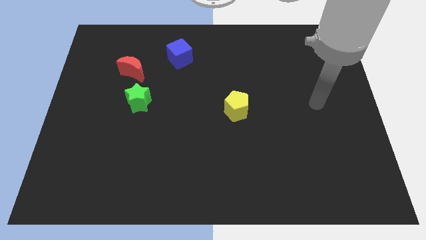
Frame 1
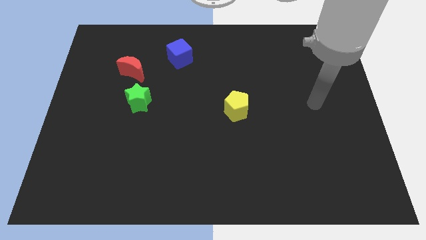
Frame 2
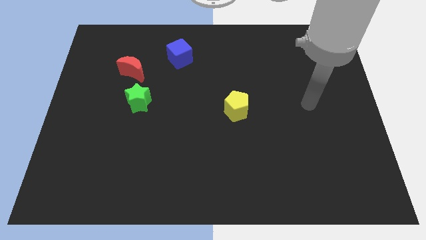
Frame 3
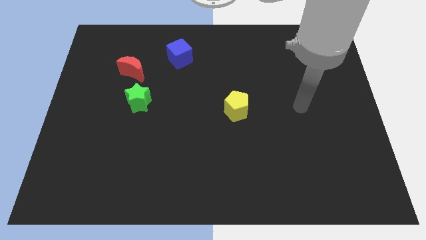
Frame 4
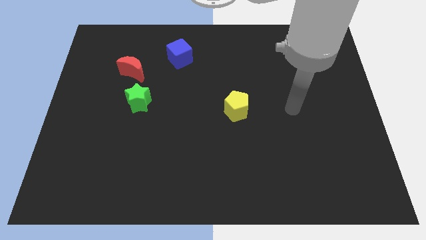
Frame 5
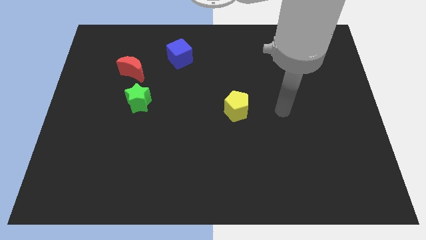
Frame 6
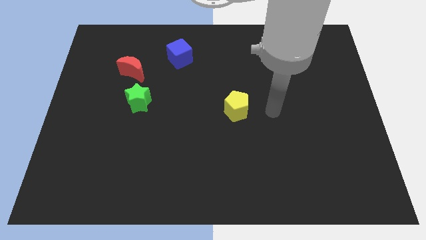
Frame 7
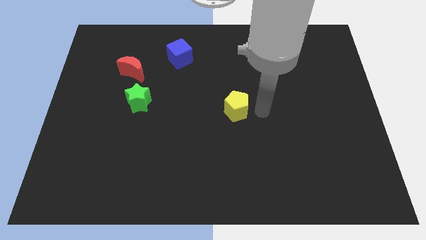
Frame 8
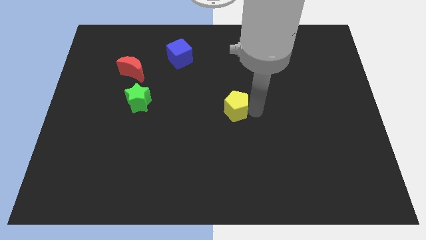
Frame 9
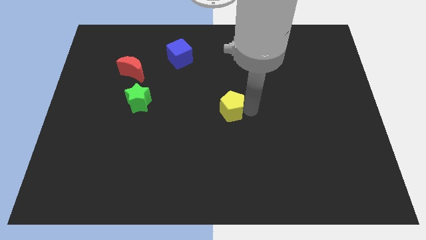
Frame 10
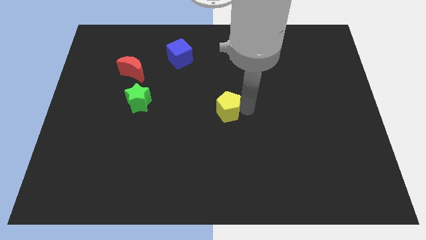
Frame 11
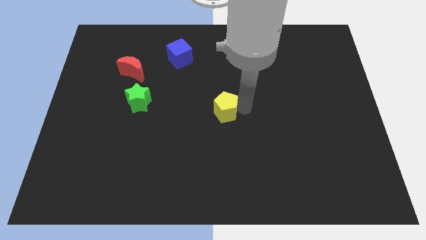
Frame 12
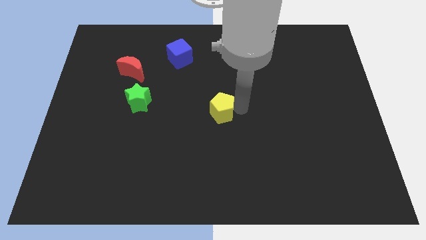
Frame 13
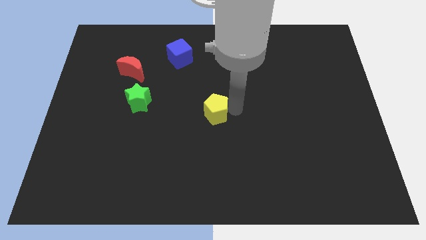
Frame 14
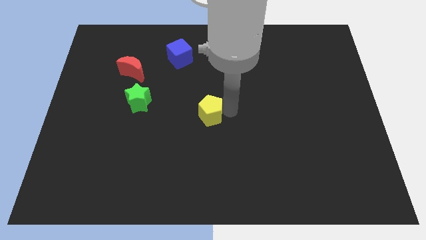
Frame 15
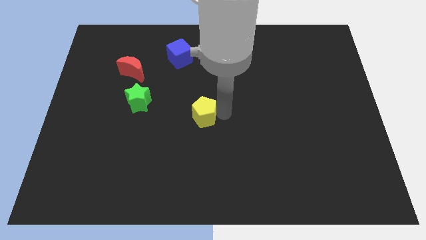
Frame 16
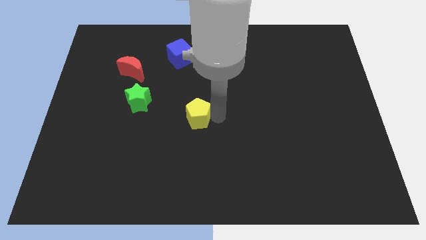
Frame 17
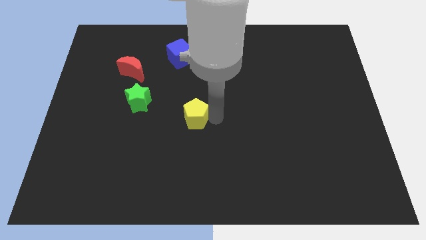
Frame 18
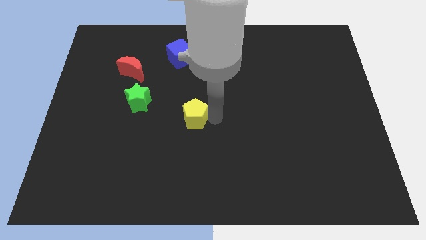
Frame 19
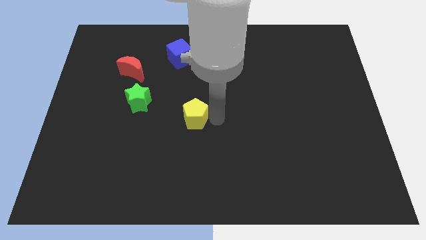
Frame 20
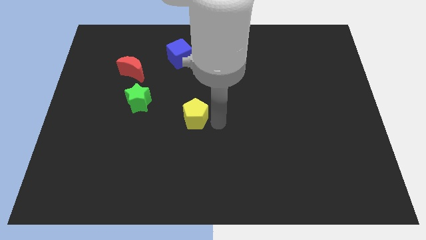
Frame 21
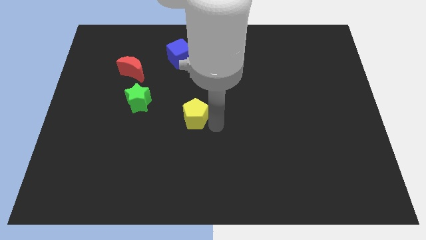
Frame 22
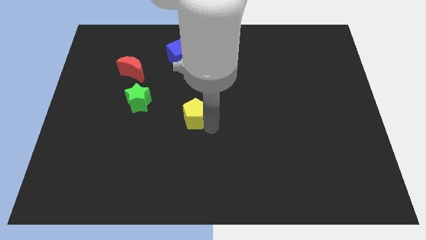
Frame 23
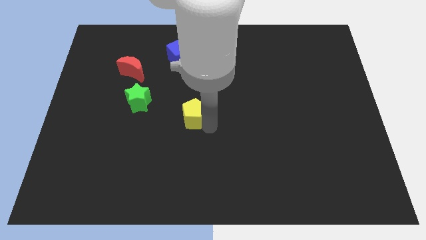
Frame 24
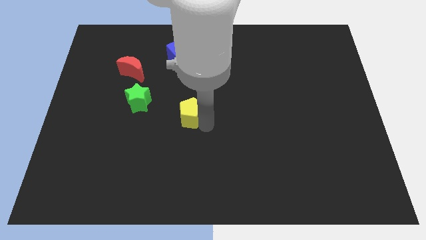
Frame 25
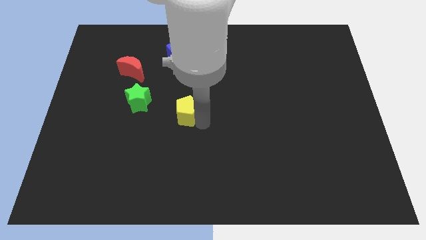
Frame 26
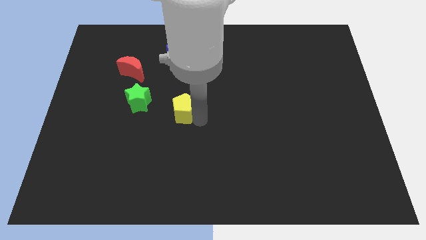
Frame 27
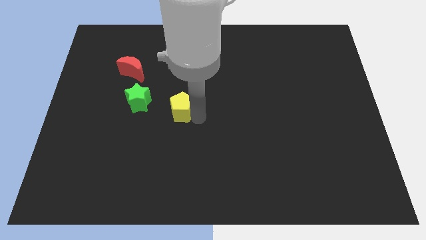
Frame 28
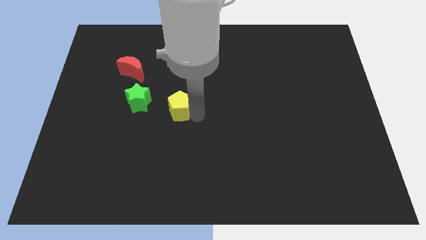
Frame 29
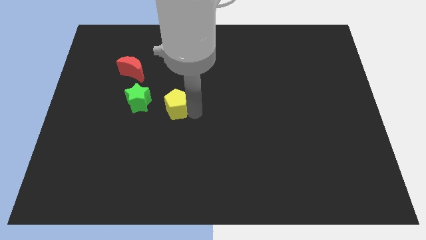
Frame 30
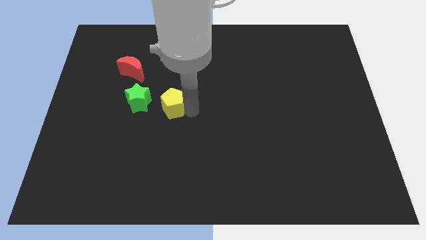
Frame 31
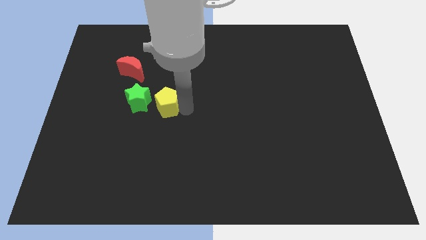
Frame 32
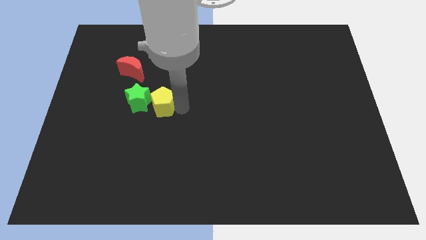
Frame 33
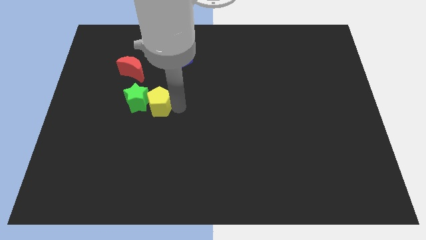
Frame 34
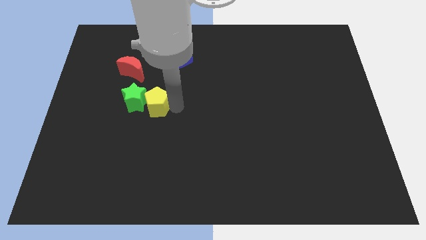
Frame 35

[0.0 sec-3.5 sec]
put the pentagon to the green star

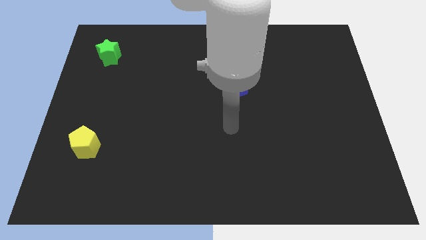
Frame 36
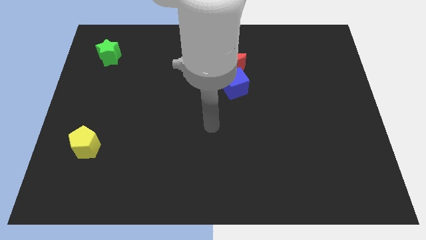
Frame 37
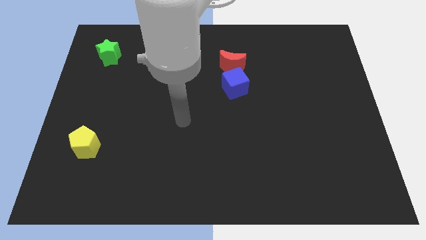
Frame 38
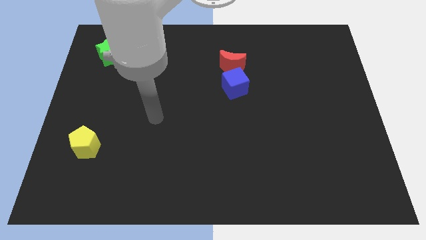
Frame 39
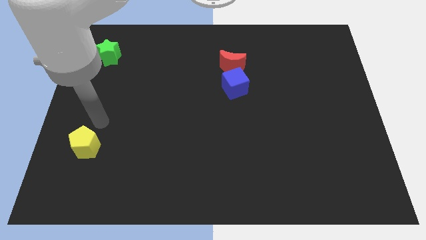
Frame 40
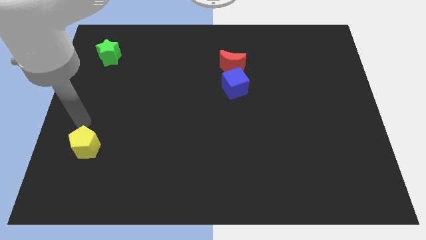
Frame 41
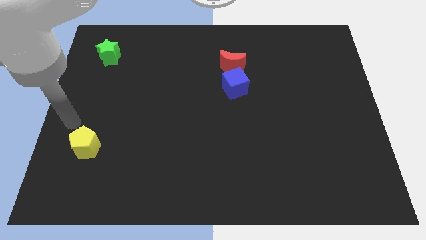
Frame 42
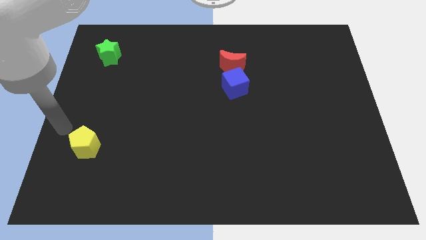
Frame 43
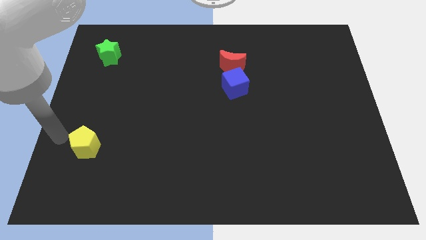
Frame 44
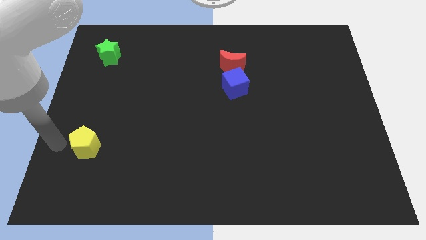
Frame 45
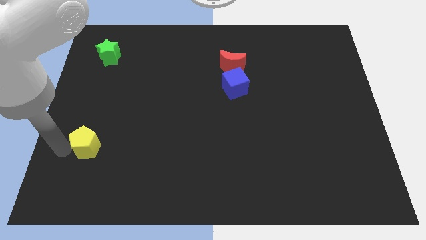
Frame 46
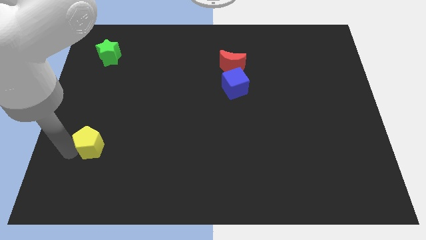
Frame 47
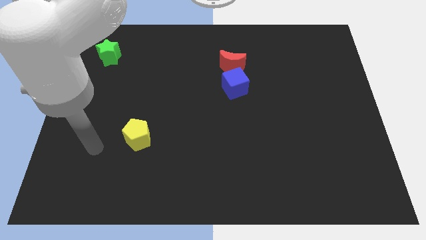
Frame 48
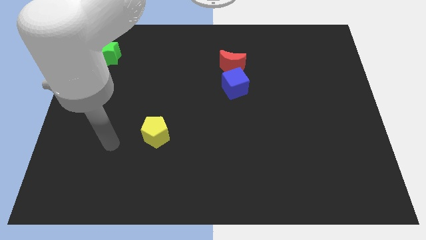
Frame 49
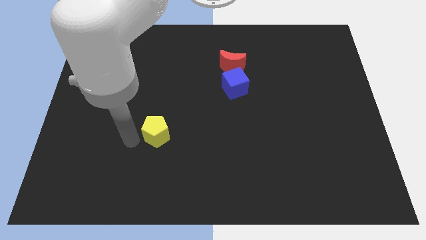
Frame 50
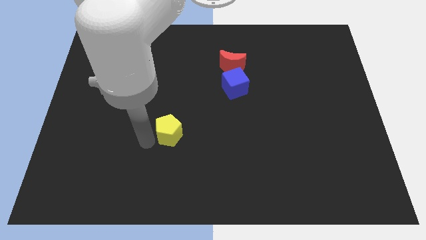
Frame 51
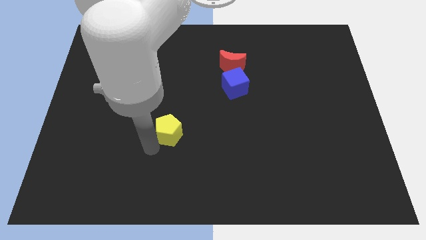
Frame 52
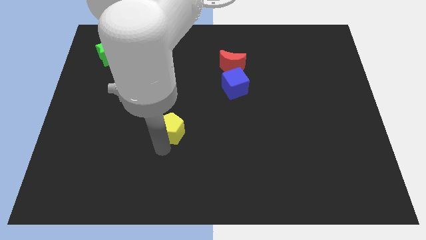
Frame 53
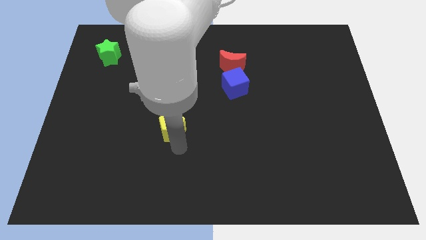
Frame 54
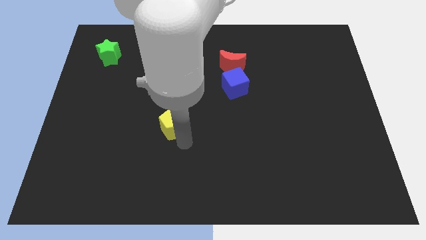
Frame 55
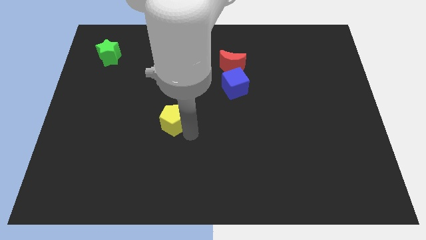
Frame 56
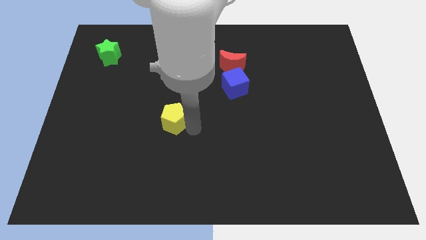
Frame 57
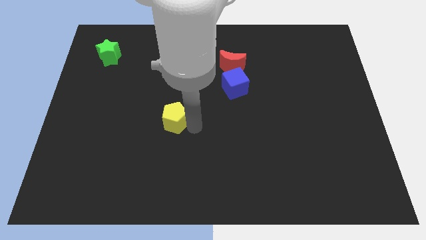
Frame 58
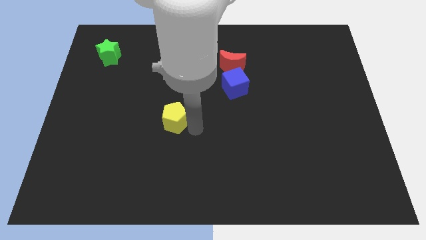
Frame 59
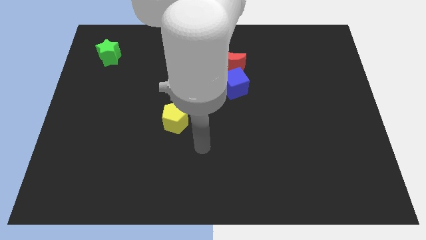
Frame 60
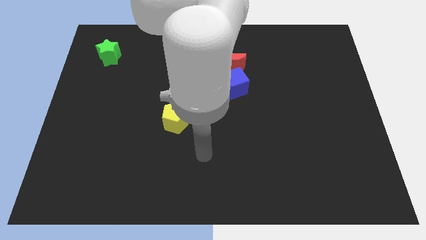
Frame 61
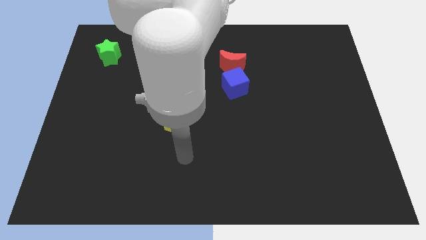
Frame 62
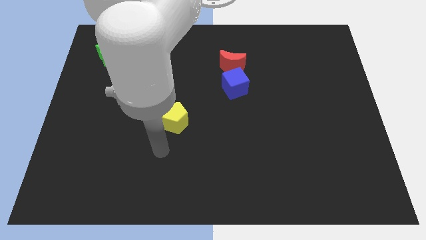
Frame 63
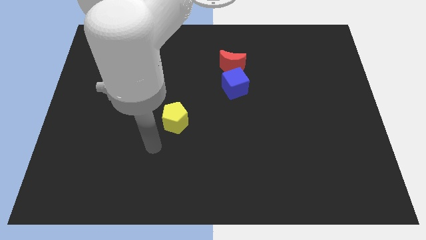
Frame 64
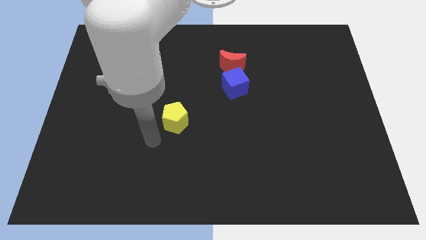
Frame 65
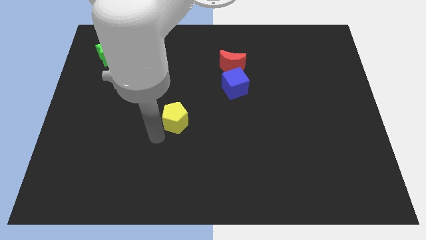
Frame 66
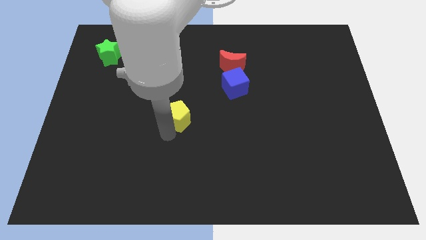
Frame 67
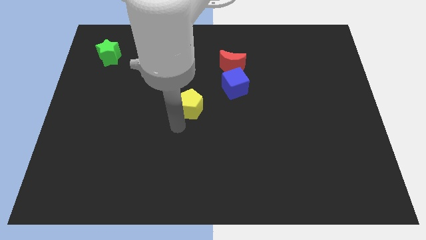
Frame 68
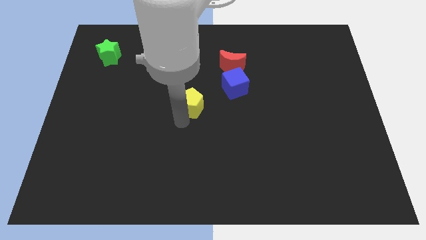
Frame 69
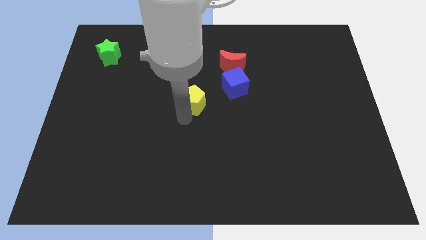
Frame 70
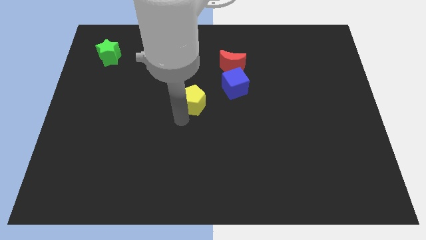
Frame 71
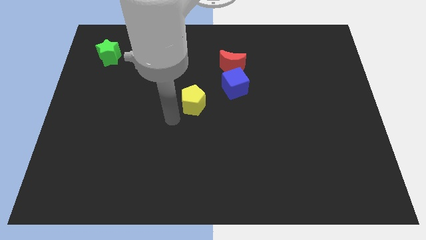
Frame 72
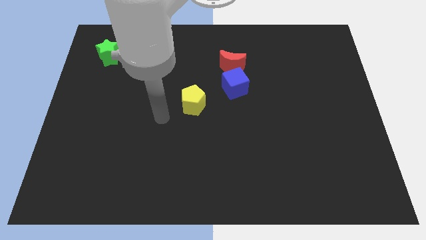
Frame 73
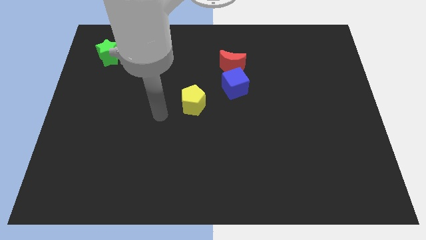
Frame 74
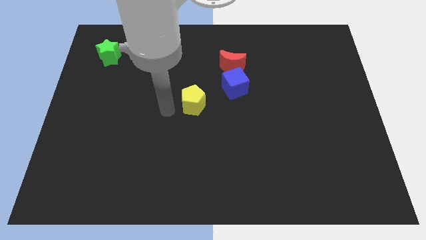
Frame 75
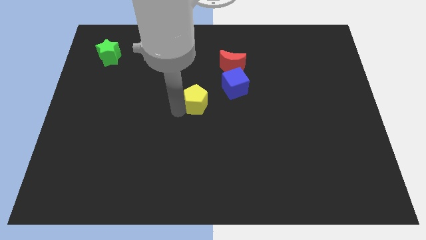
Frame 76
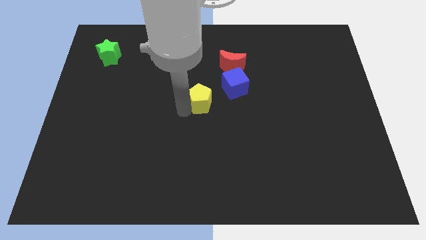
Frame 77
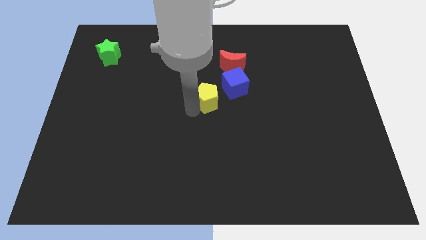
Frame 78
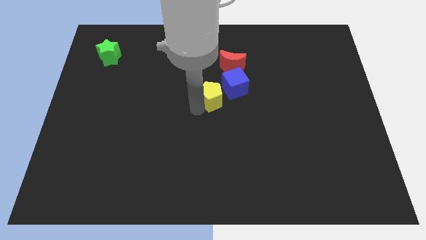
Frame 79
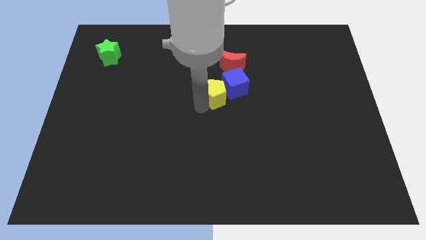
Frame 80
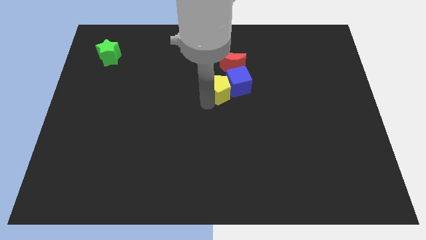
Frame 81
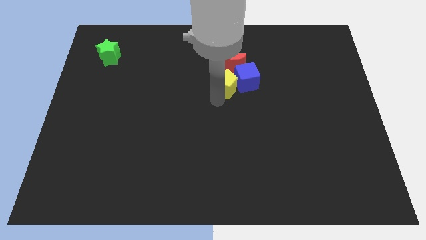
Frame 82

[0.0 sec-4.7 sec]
slide the yellow pentagon to the blue cube
